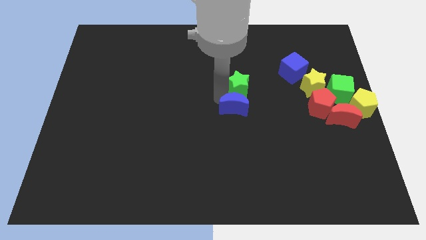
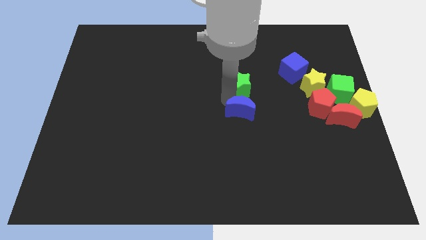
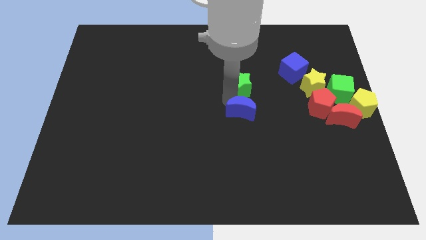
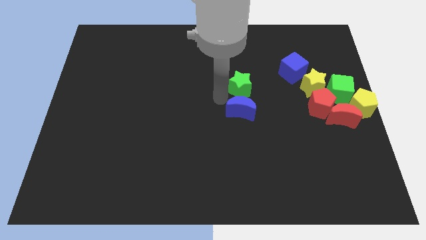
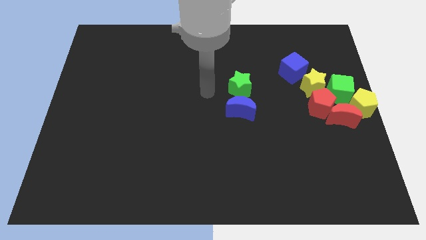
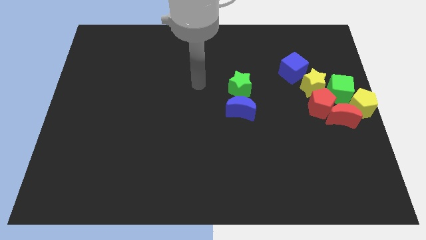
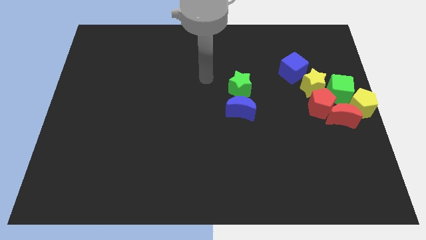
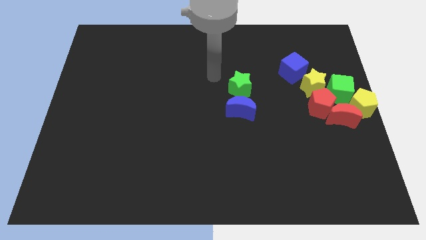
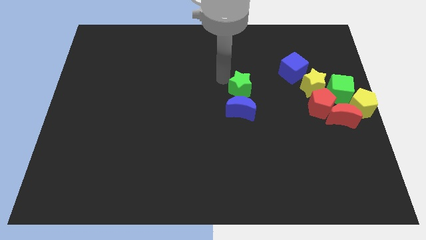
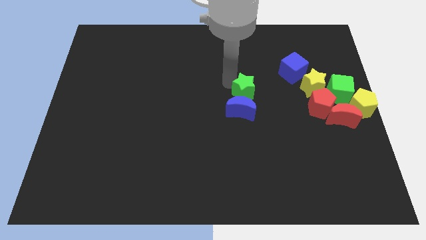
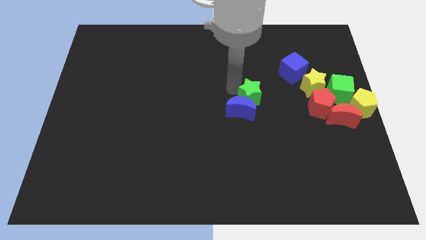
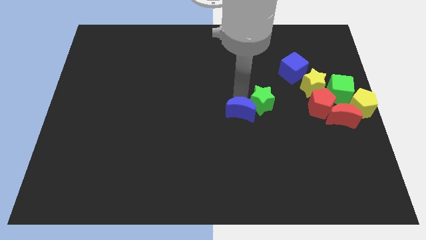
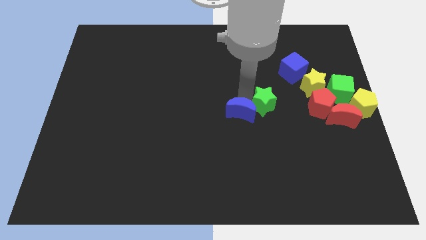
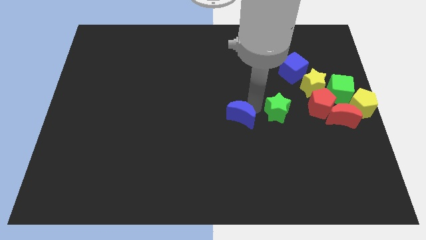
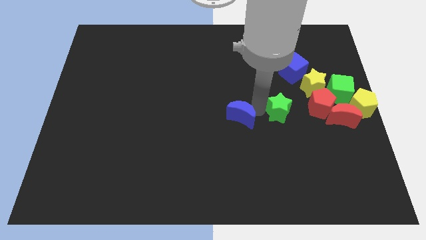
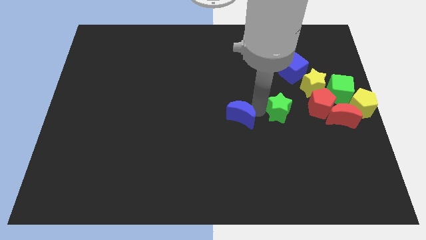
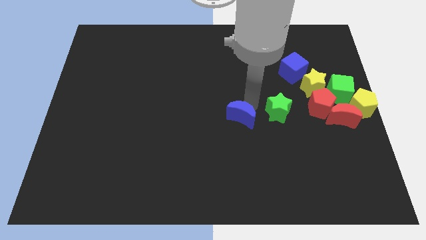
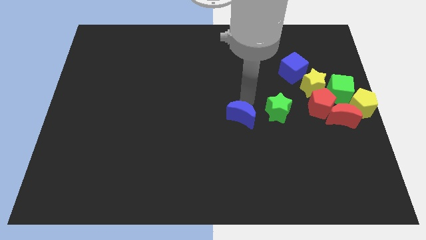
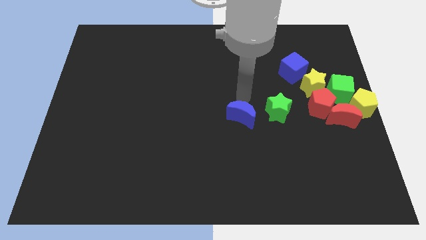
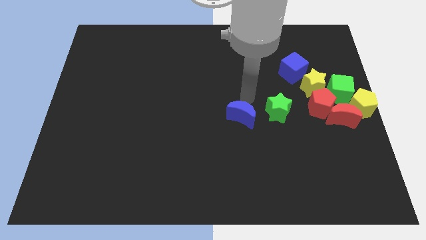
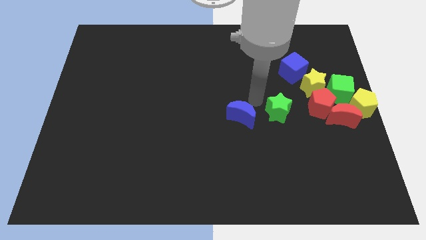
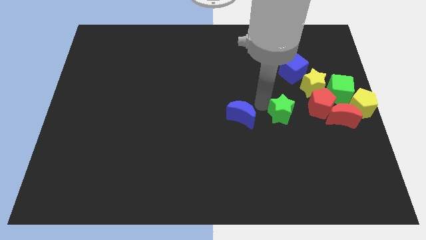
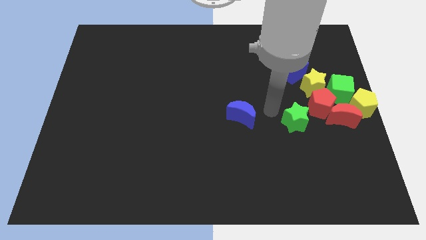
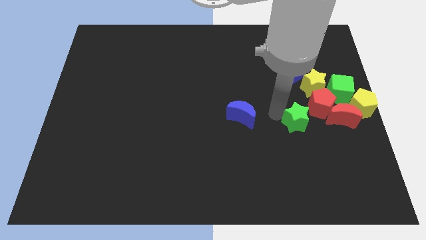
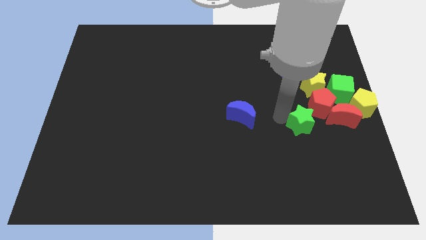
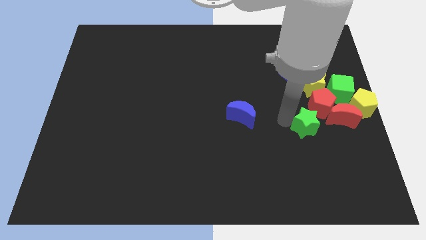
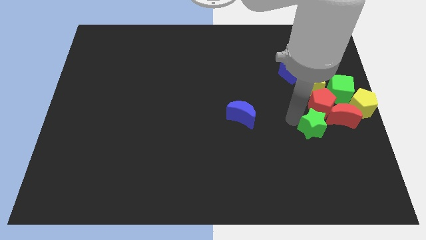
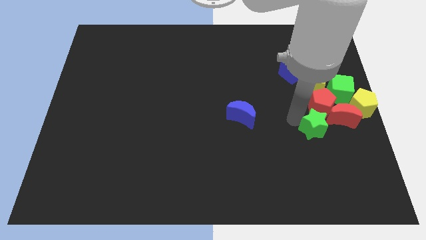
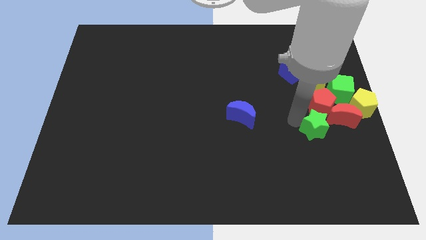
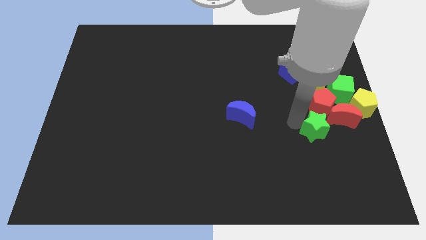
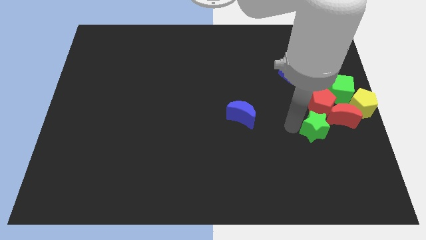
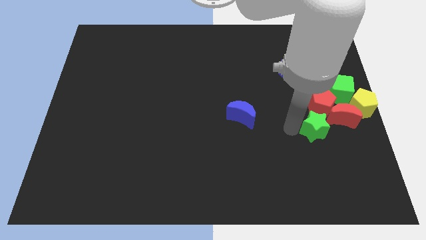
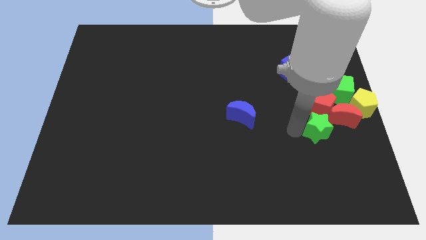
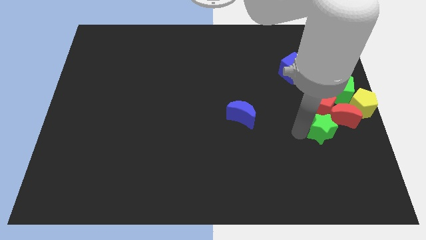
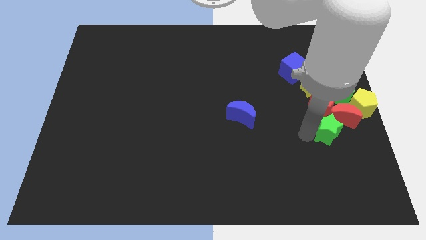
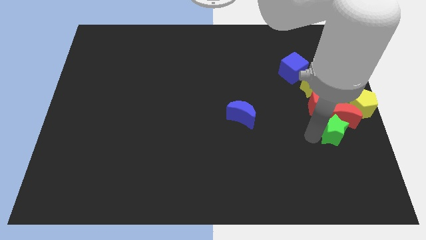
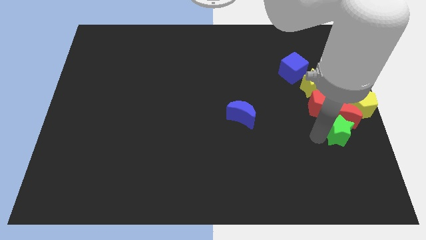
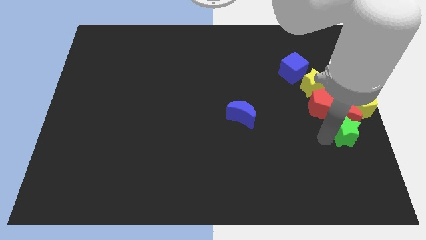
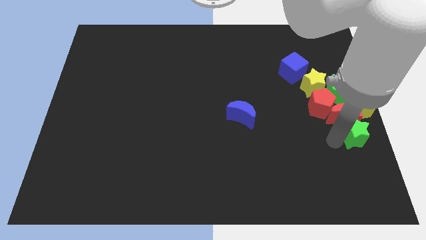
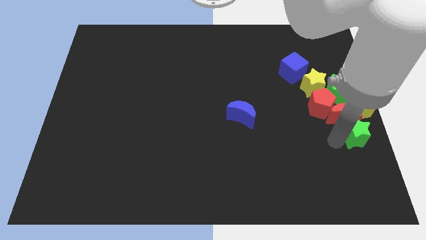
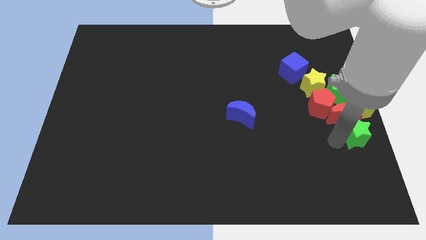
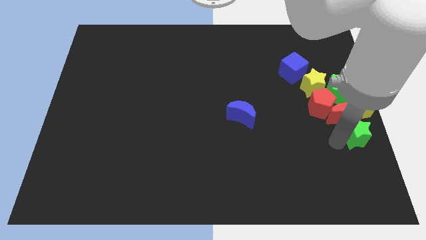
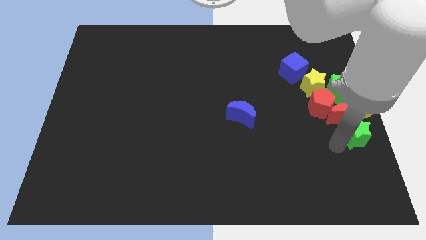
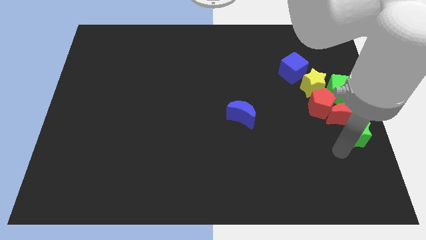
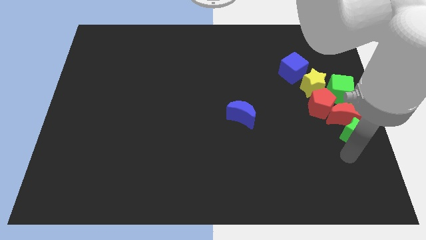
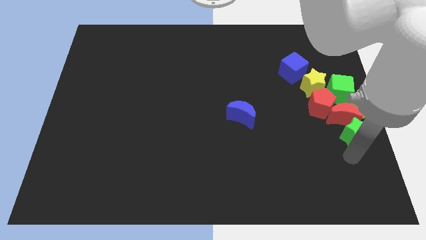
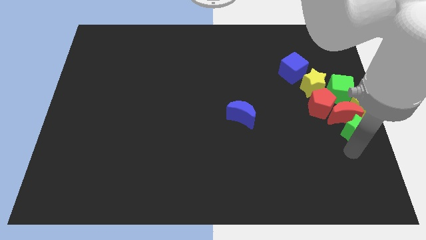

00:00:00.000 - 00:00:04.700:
move the green into the red crescent

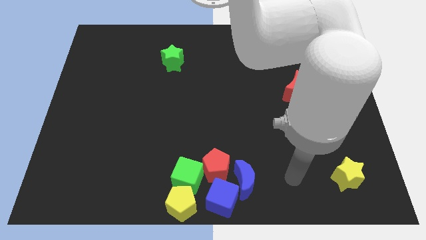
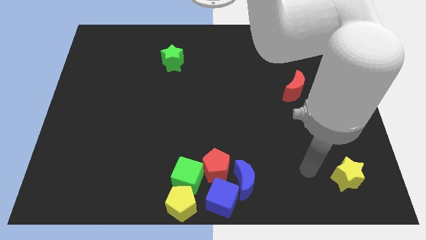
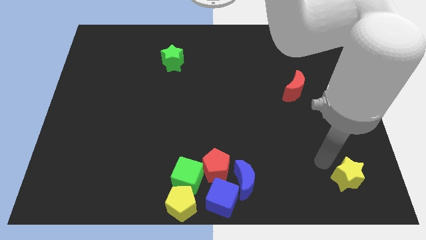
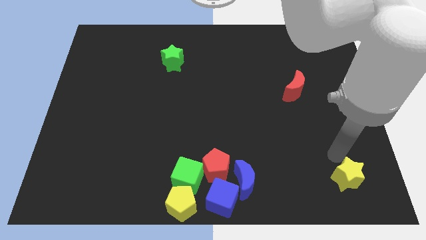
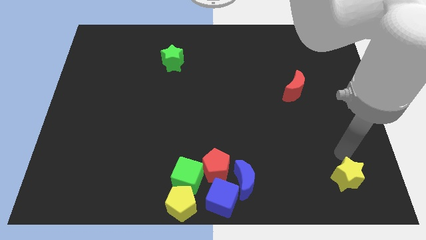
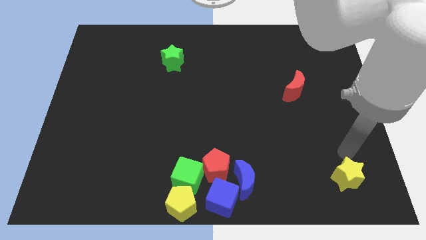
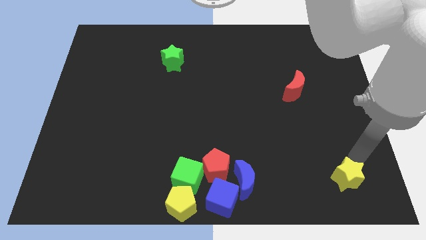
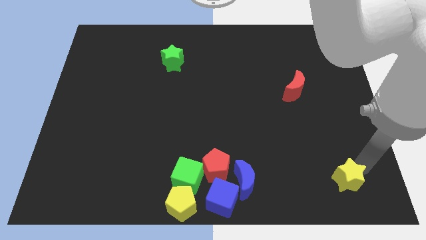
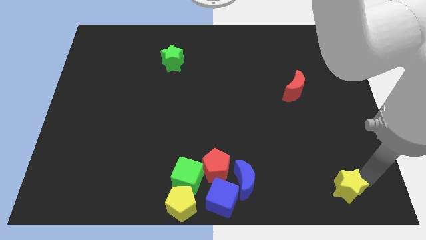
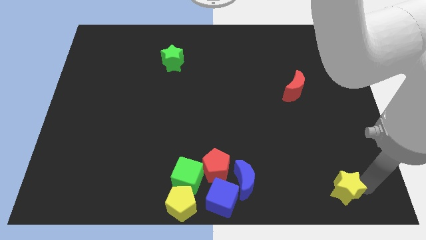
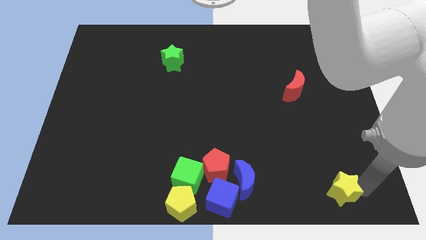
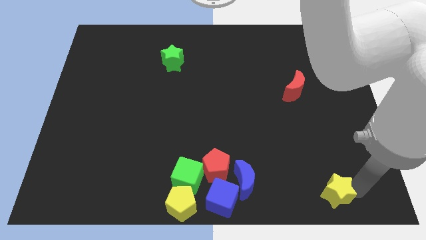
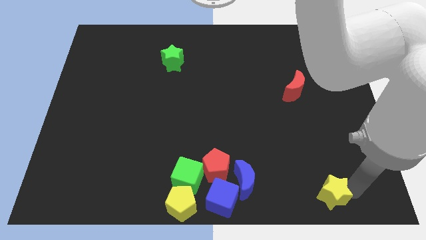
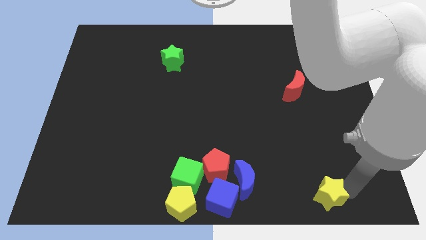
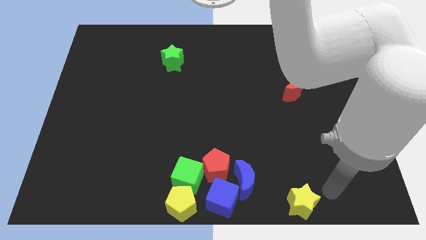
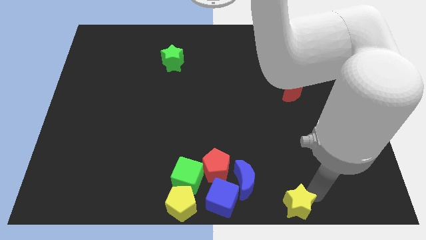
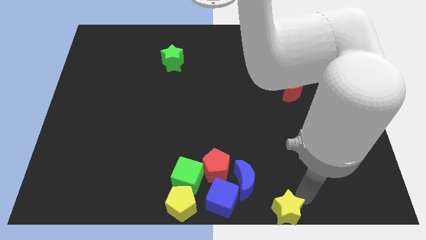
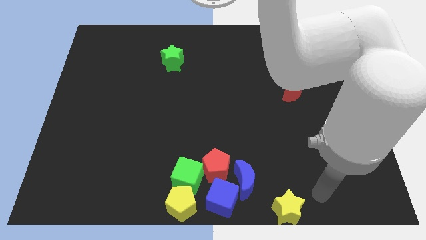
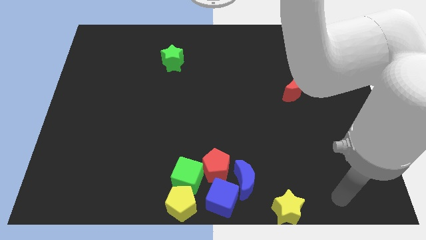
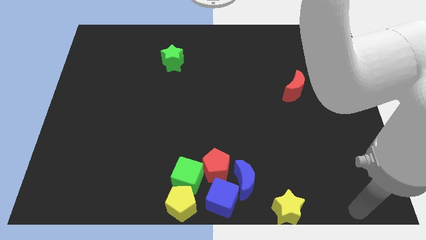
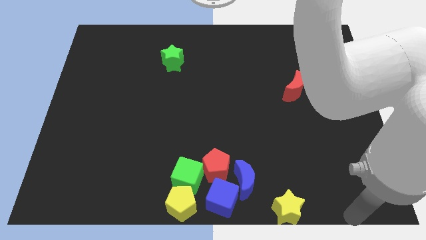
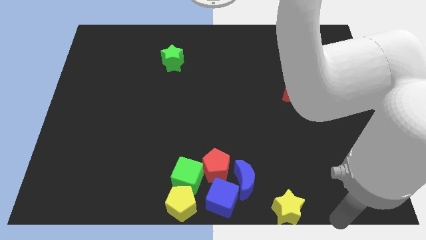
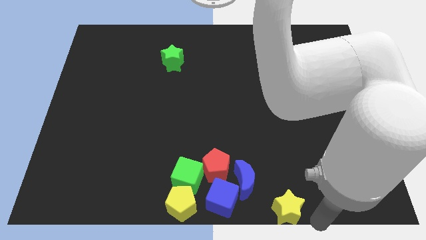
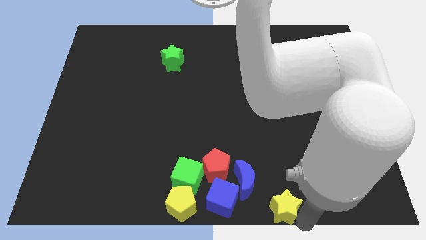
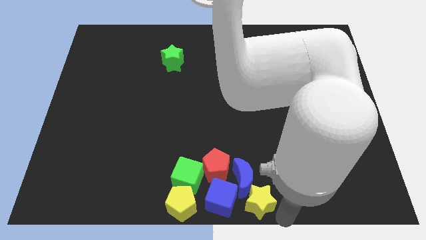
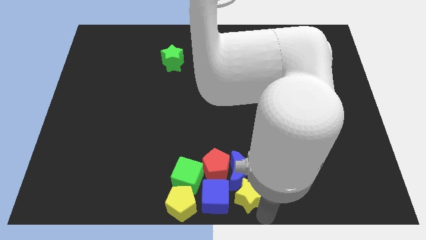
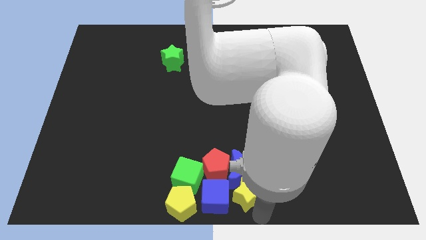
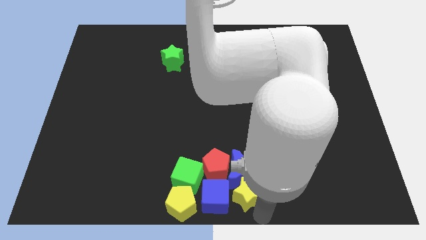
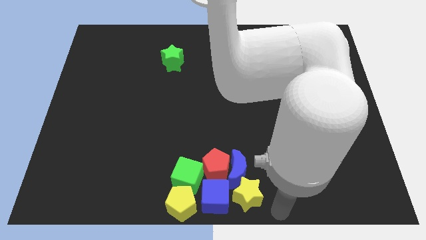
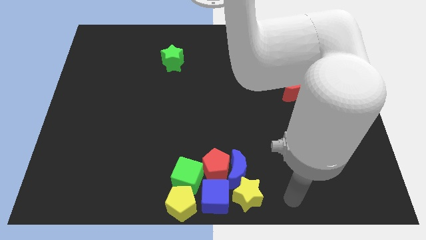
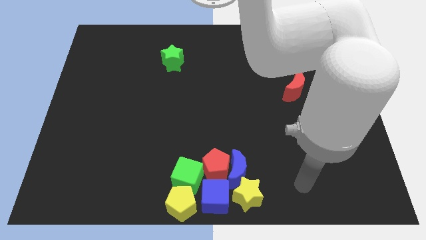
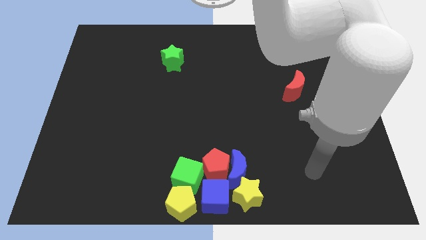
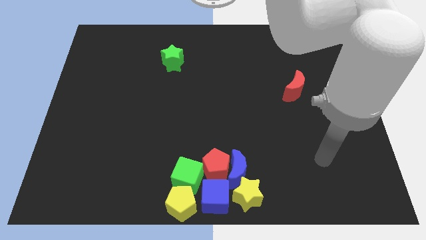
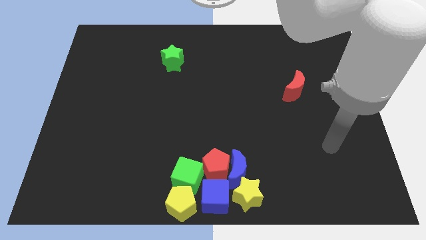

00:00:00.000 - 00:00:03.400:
push the yellow star into blue crescent

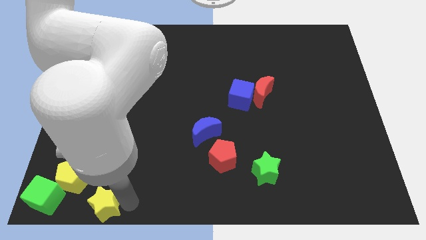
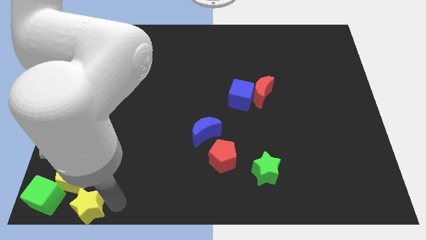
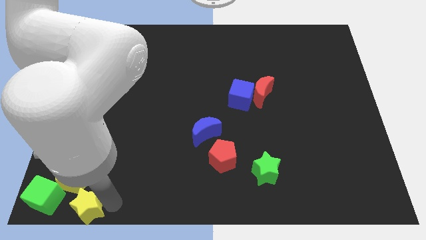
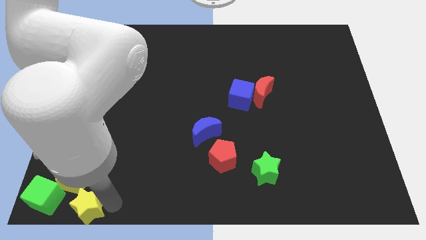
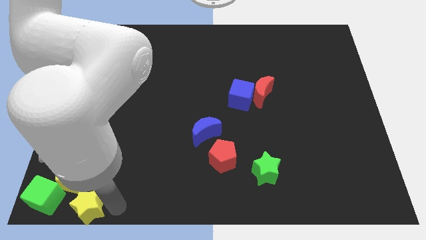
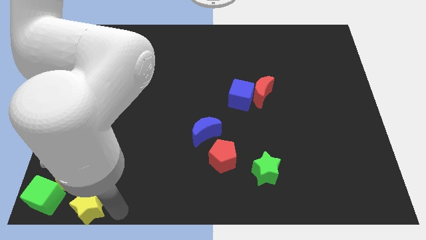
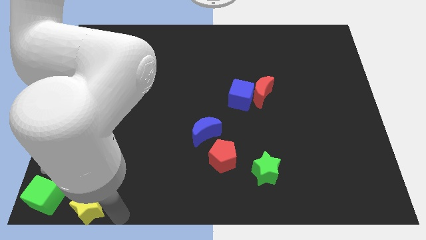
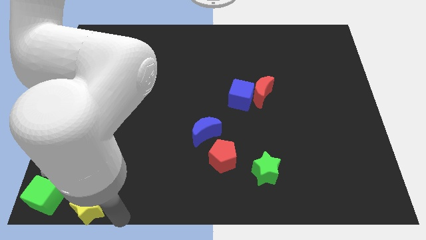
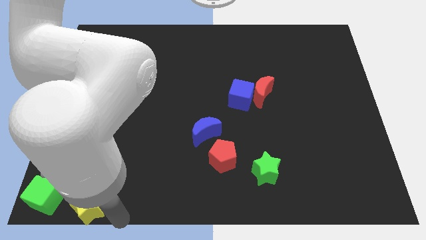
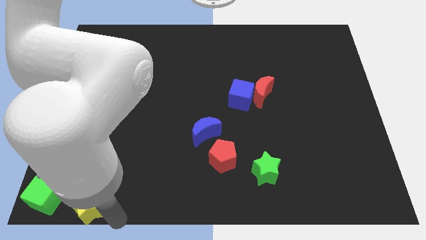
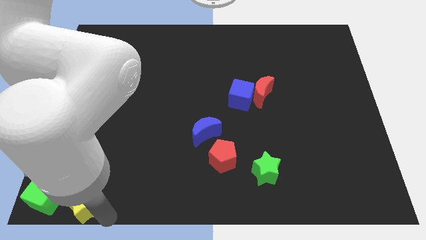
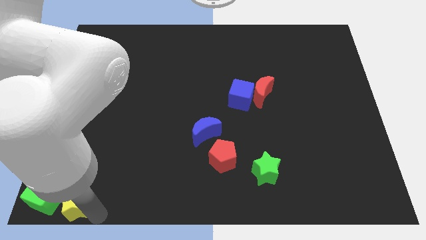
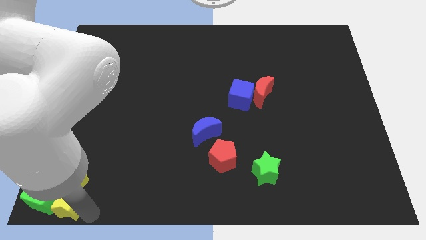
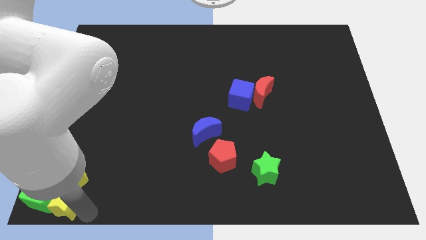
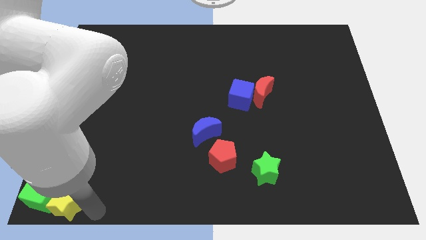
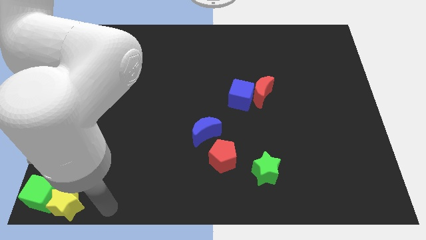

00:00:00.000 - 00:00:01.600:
put the yellow star on the right side of the green cube
